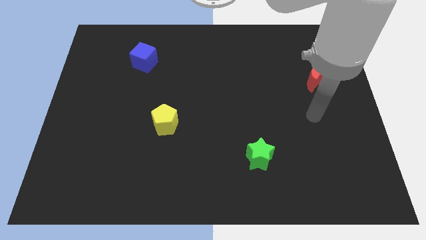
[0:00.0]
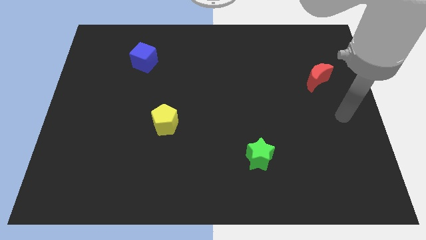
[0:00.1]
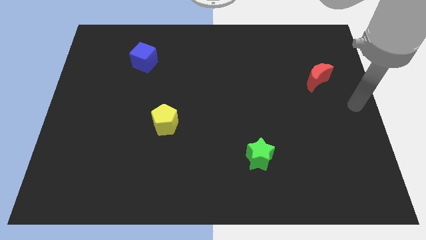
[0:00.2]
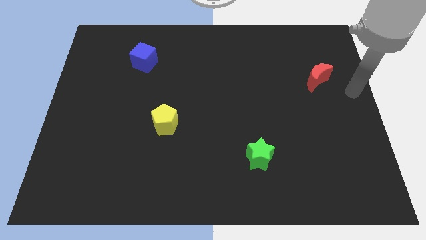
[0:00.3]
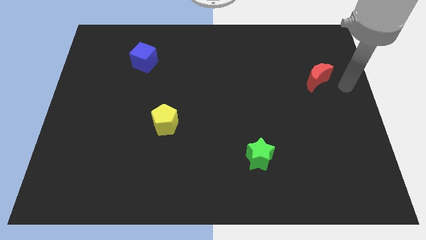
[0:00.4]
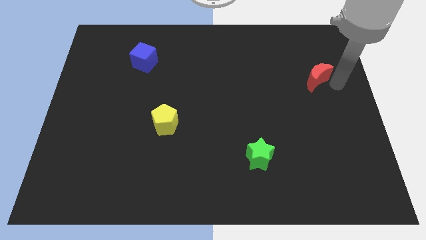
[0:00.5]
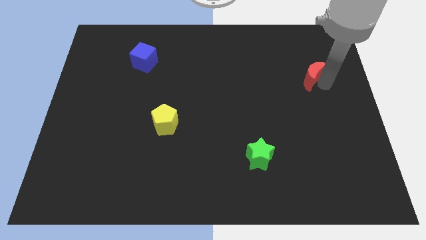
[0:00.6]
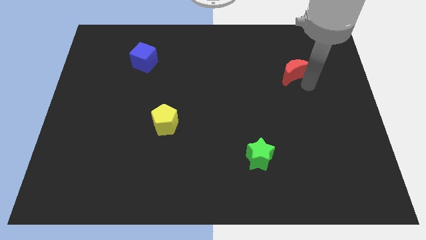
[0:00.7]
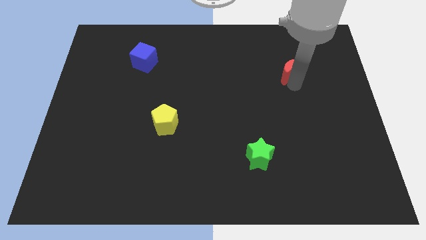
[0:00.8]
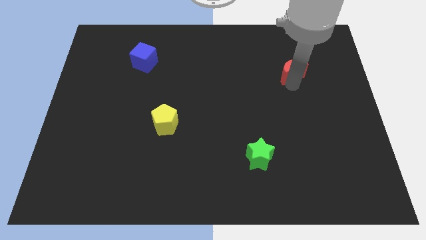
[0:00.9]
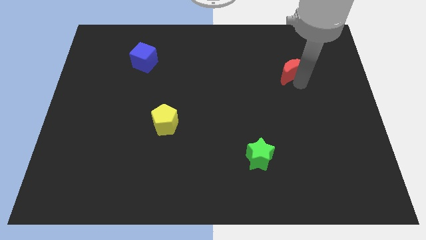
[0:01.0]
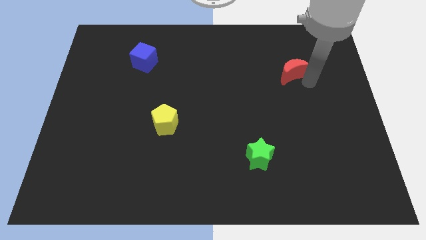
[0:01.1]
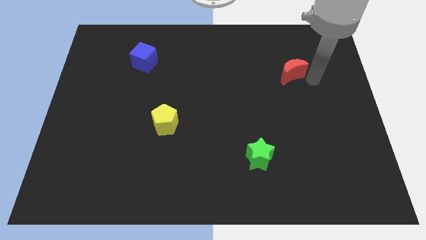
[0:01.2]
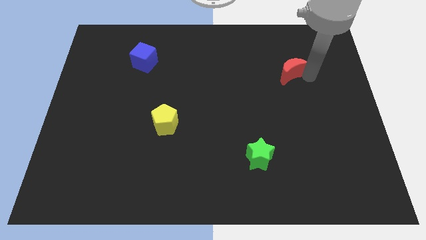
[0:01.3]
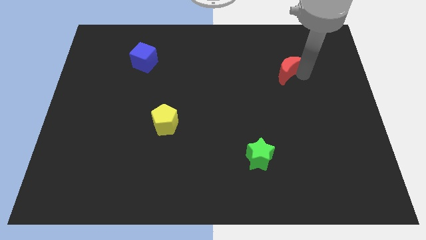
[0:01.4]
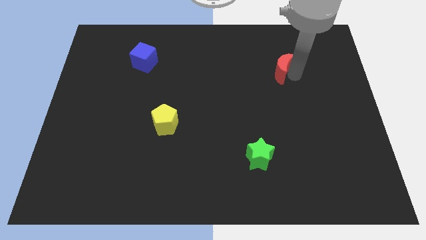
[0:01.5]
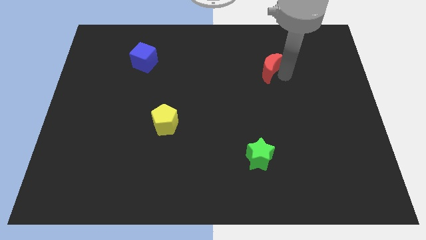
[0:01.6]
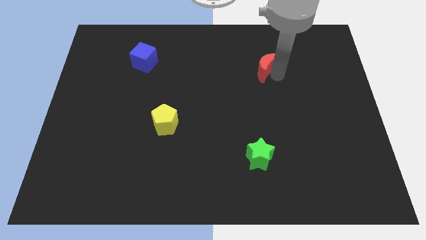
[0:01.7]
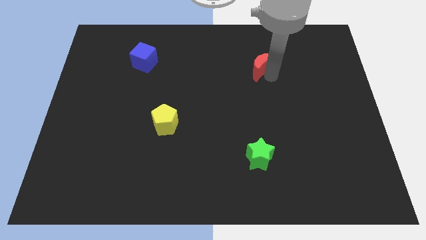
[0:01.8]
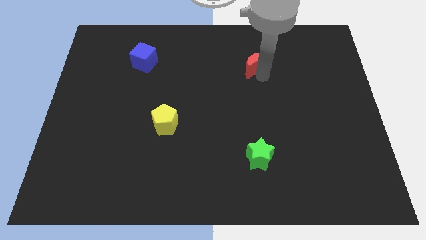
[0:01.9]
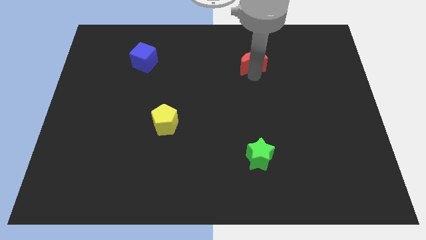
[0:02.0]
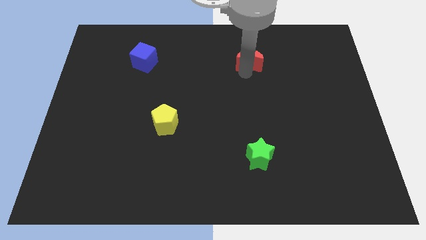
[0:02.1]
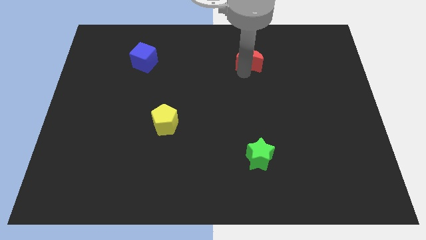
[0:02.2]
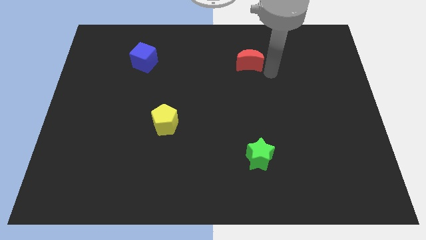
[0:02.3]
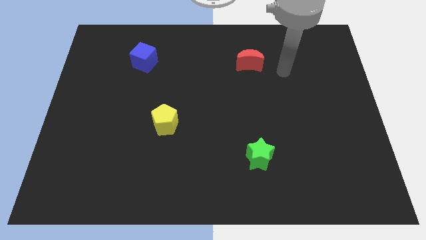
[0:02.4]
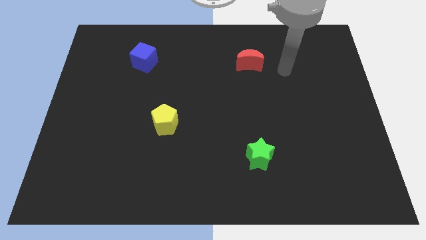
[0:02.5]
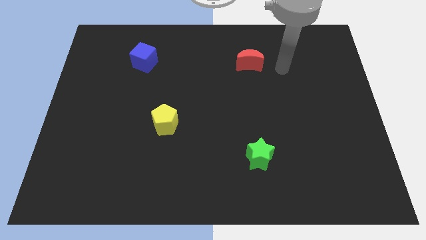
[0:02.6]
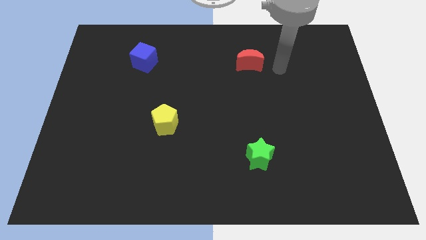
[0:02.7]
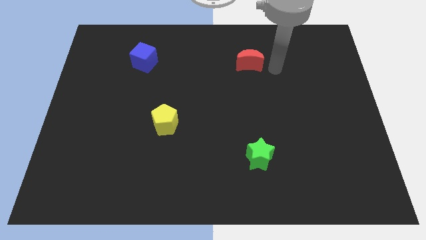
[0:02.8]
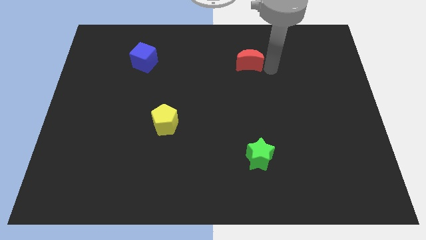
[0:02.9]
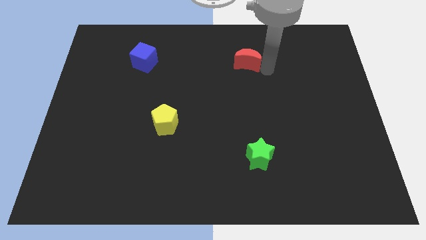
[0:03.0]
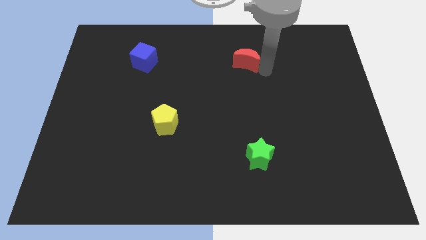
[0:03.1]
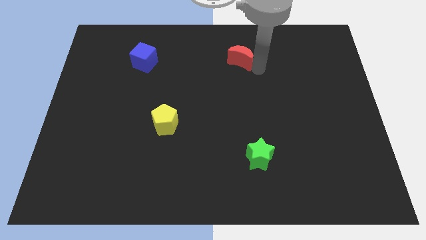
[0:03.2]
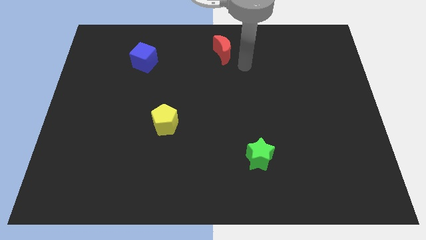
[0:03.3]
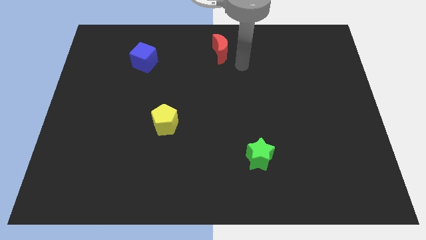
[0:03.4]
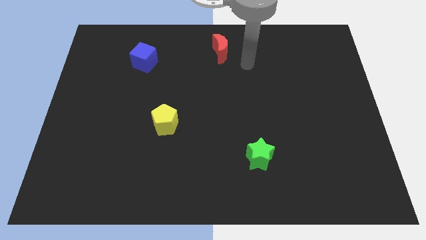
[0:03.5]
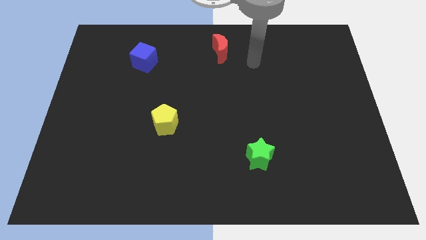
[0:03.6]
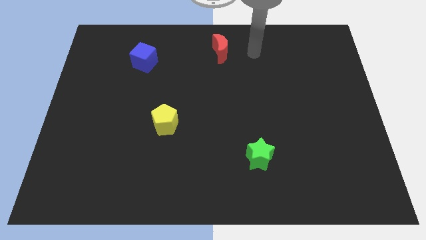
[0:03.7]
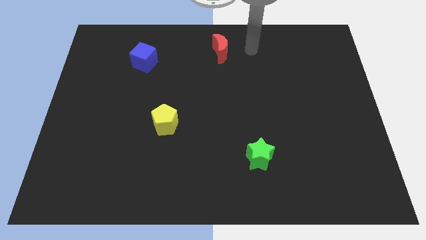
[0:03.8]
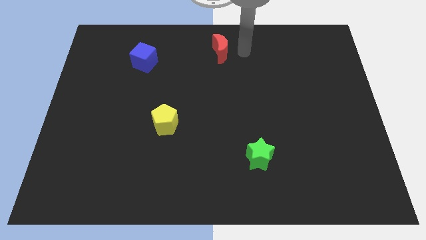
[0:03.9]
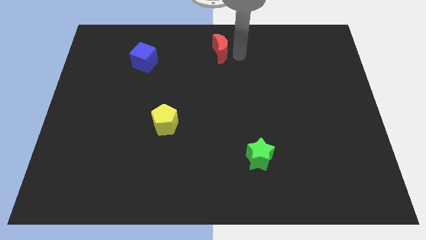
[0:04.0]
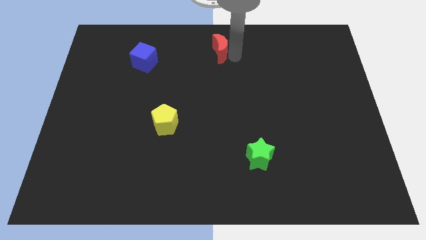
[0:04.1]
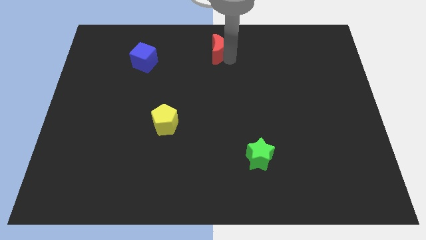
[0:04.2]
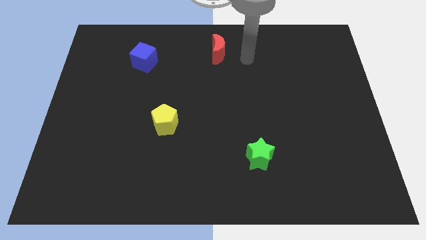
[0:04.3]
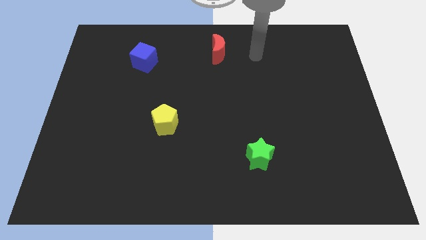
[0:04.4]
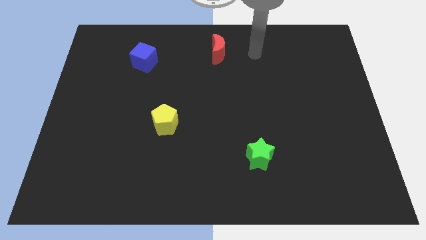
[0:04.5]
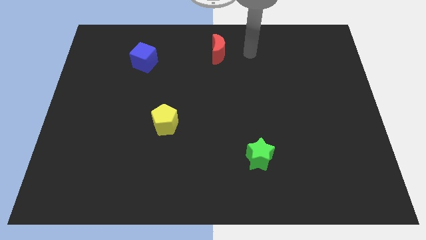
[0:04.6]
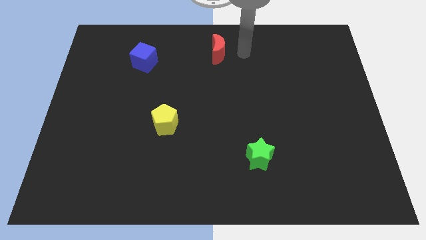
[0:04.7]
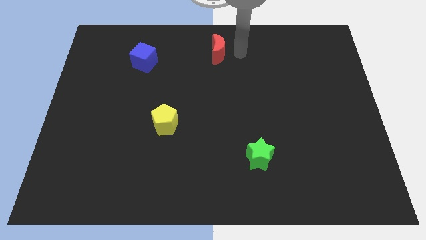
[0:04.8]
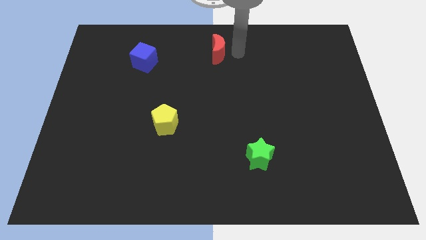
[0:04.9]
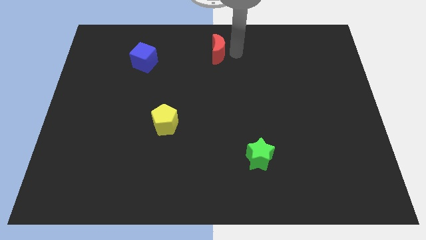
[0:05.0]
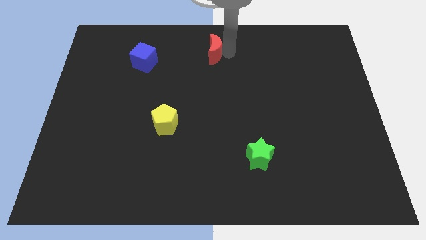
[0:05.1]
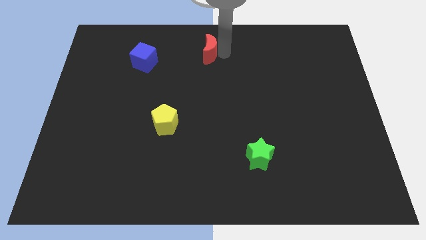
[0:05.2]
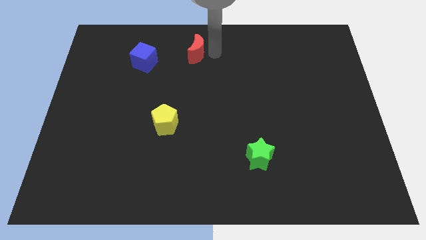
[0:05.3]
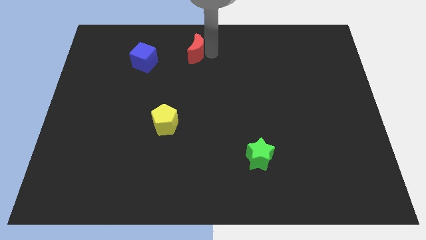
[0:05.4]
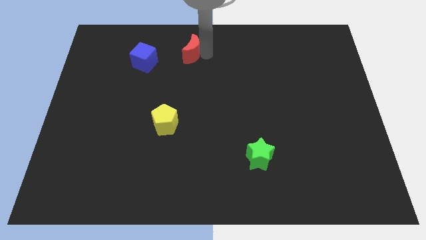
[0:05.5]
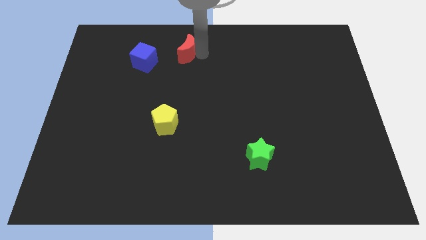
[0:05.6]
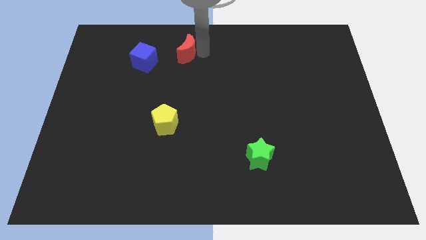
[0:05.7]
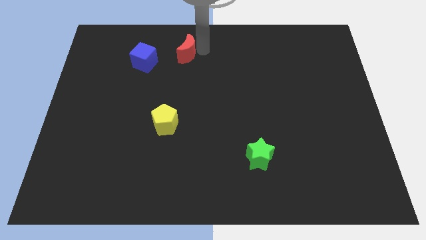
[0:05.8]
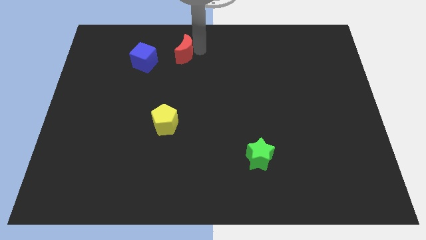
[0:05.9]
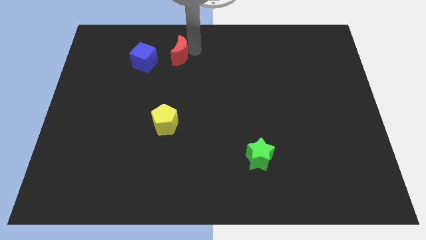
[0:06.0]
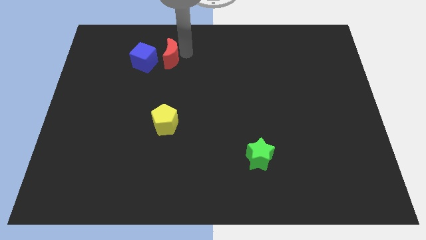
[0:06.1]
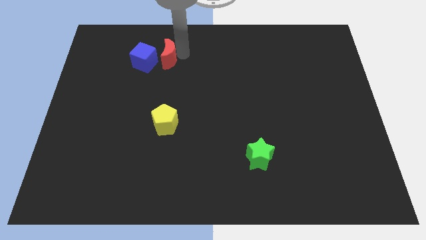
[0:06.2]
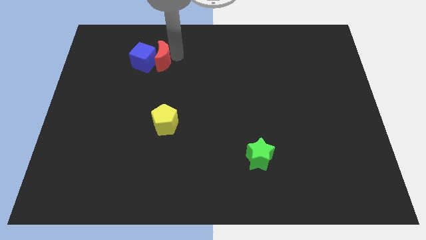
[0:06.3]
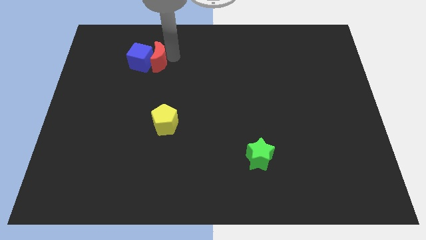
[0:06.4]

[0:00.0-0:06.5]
move the red block next to the cube

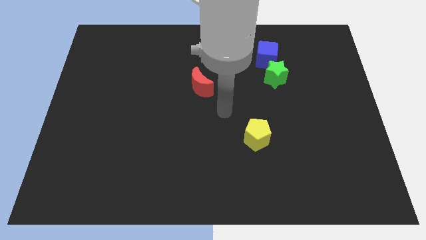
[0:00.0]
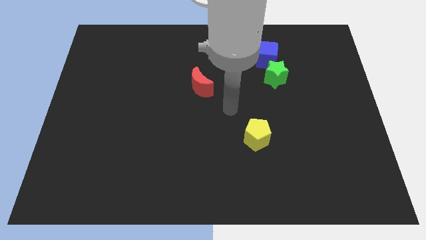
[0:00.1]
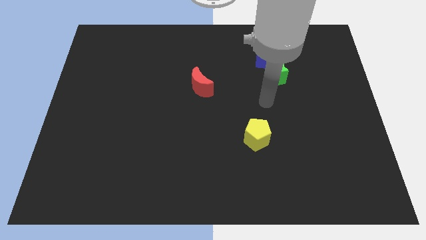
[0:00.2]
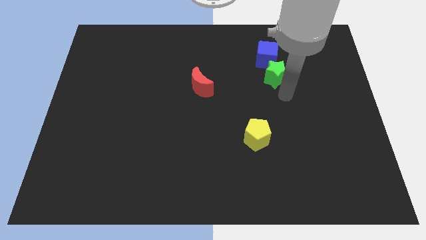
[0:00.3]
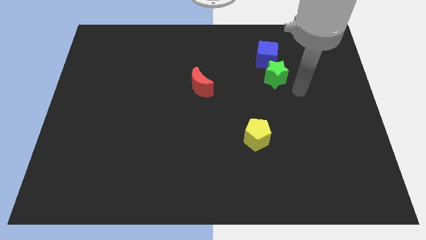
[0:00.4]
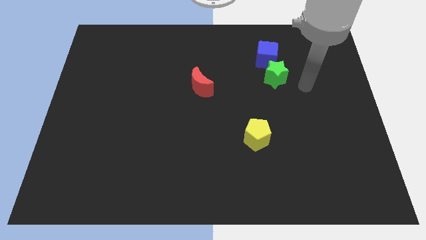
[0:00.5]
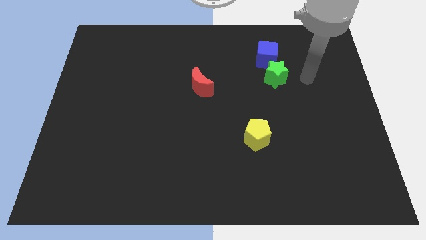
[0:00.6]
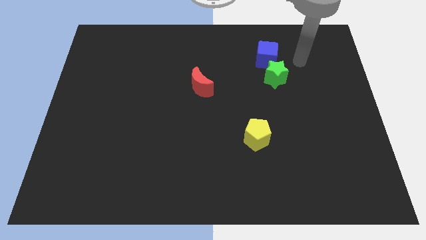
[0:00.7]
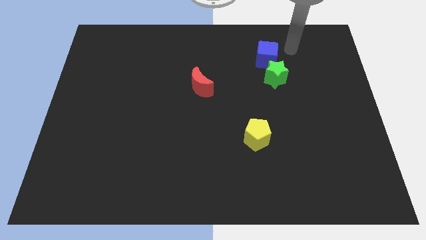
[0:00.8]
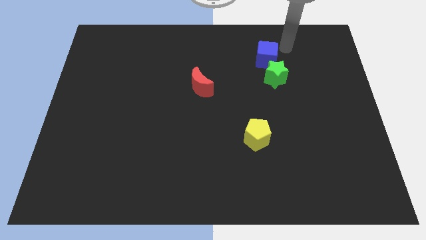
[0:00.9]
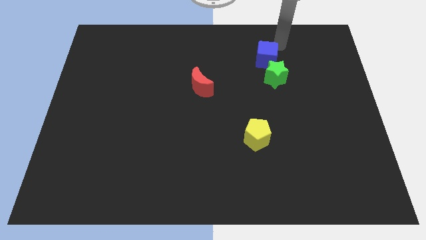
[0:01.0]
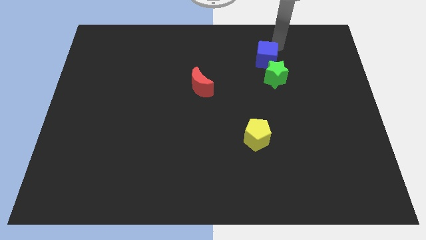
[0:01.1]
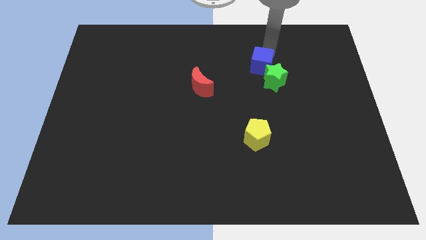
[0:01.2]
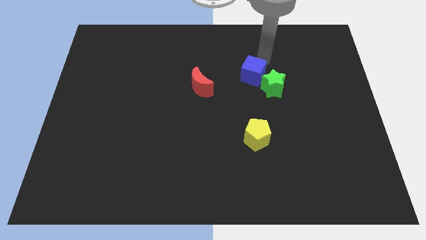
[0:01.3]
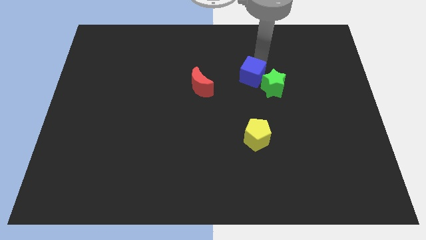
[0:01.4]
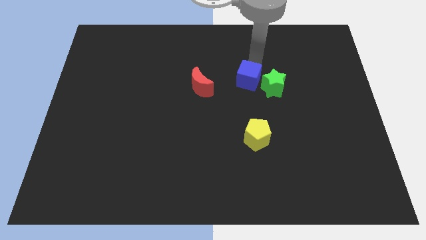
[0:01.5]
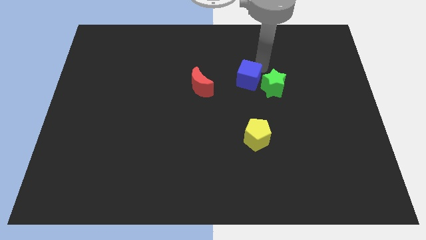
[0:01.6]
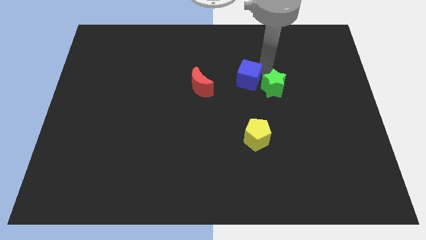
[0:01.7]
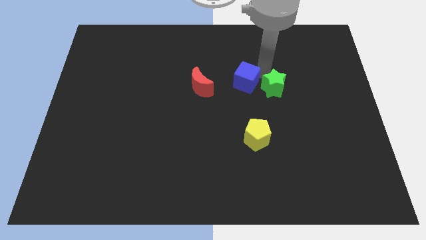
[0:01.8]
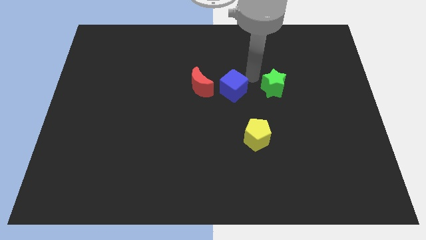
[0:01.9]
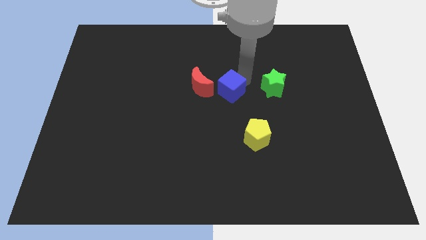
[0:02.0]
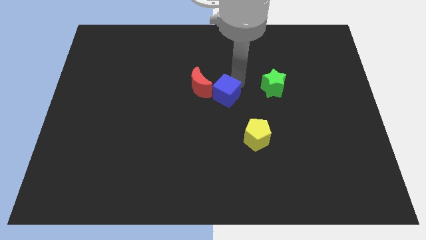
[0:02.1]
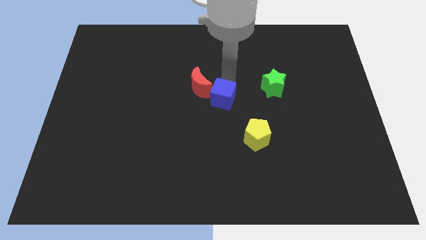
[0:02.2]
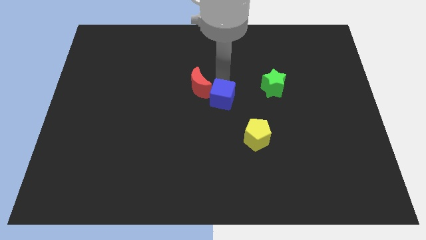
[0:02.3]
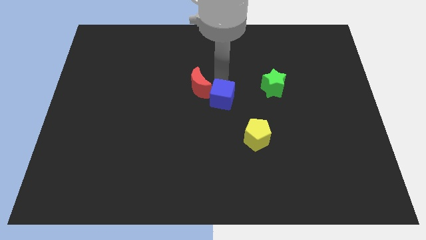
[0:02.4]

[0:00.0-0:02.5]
put the blue cube next to the moon
